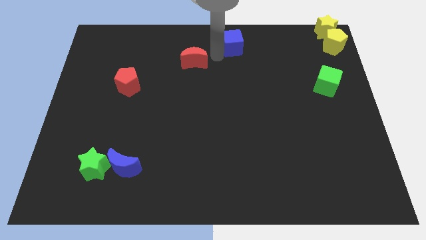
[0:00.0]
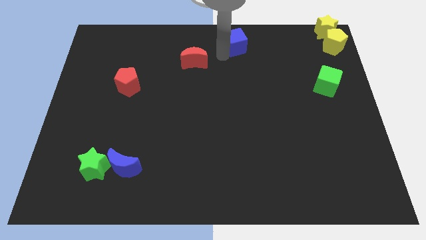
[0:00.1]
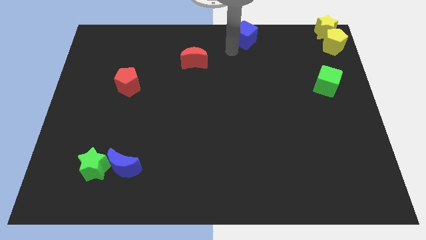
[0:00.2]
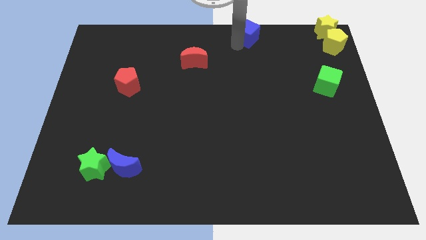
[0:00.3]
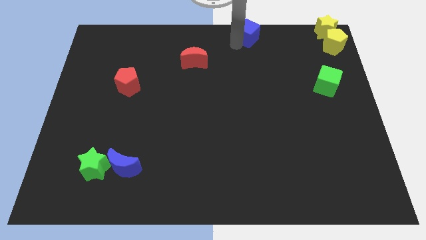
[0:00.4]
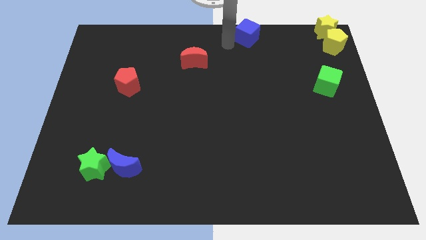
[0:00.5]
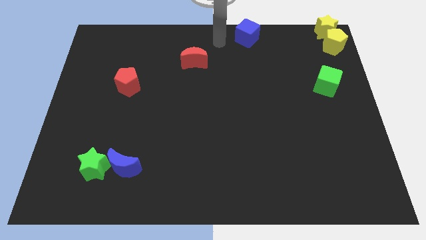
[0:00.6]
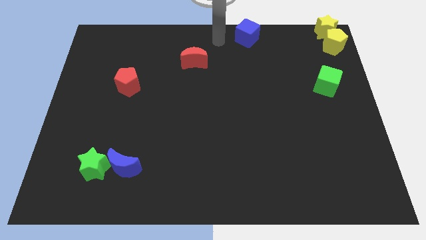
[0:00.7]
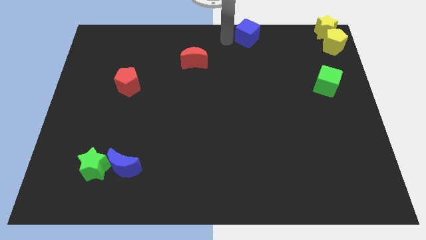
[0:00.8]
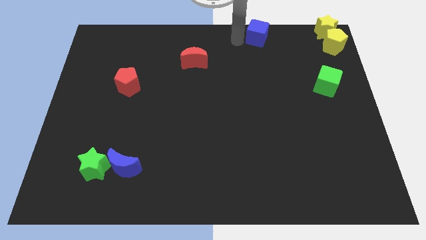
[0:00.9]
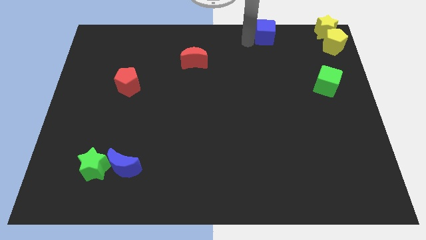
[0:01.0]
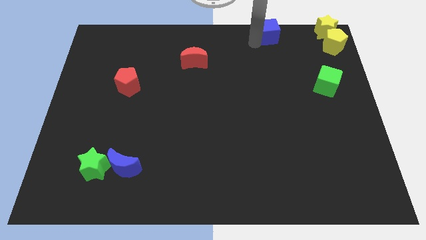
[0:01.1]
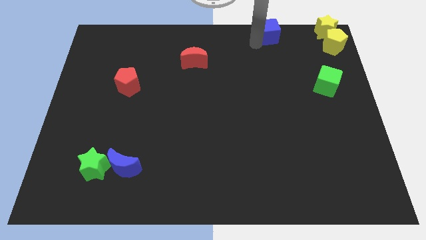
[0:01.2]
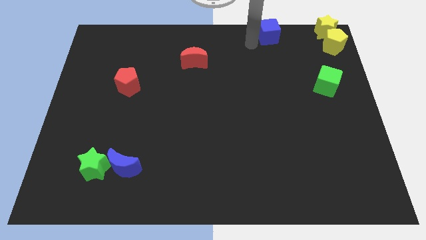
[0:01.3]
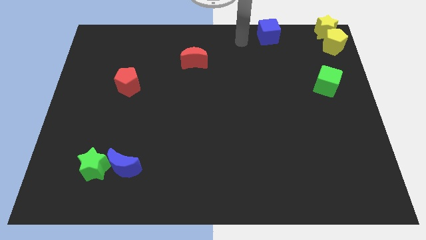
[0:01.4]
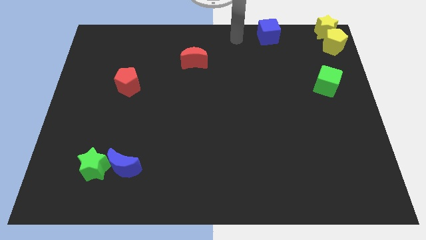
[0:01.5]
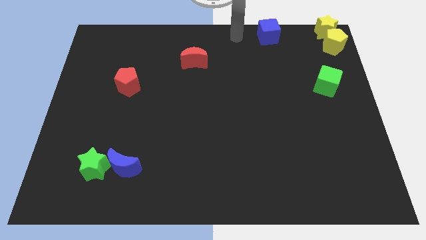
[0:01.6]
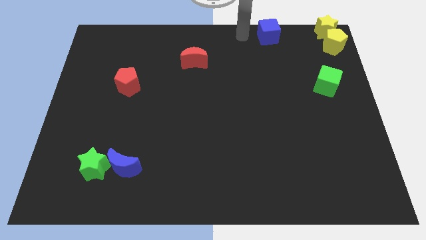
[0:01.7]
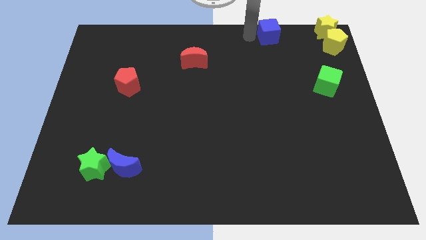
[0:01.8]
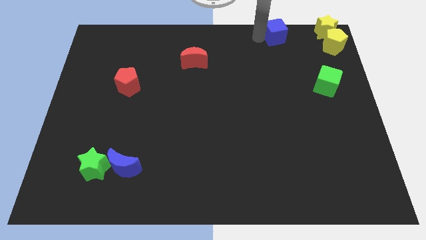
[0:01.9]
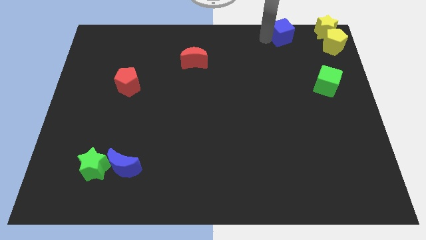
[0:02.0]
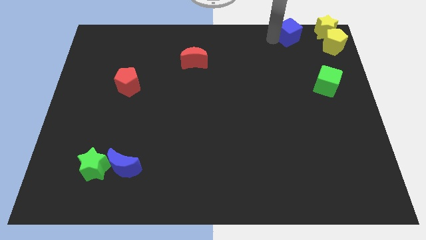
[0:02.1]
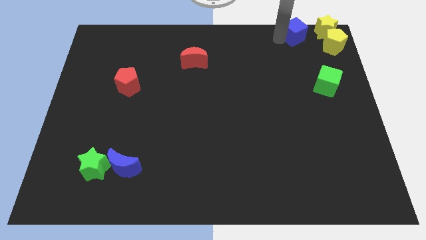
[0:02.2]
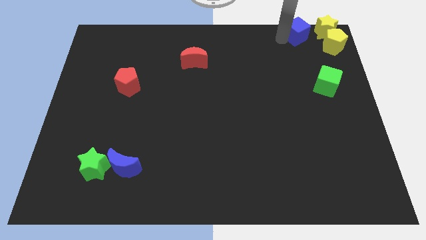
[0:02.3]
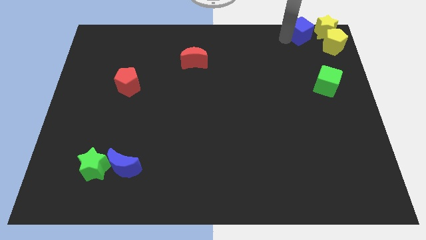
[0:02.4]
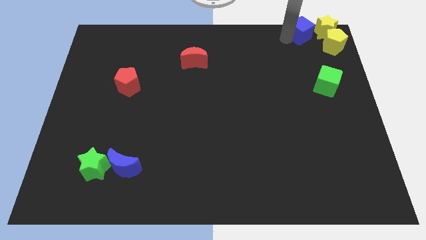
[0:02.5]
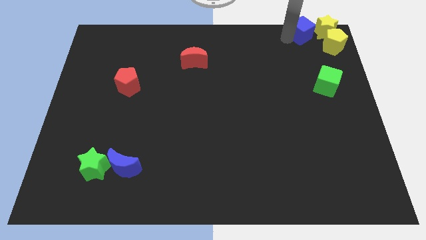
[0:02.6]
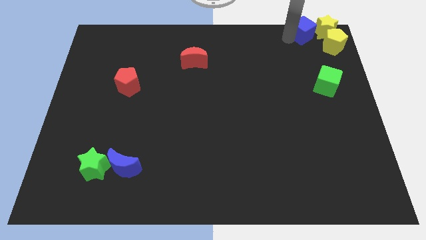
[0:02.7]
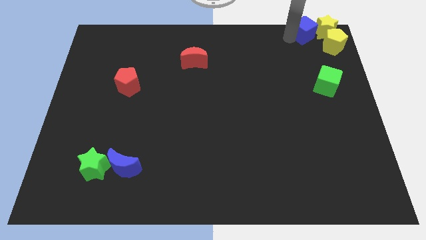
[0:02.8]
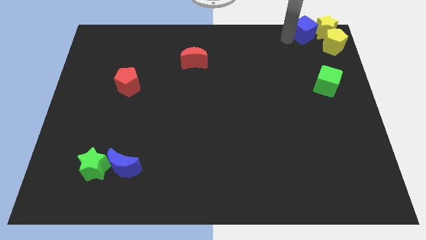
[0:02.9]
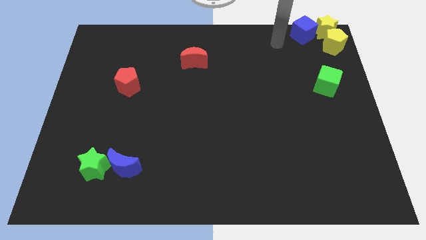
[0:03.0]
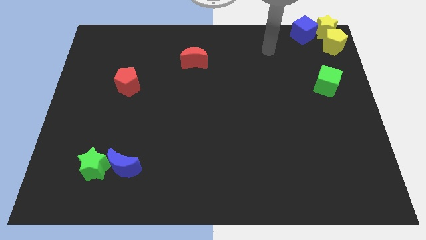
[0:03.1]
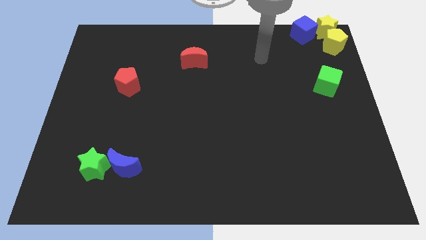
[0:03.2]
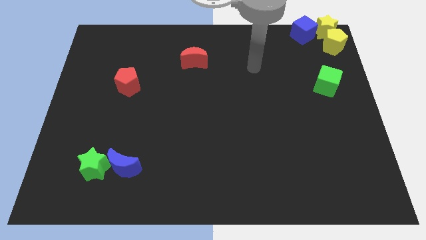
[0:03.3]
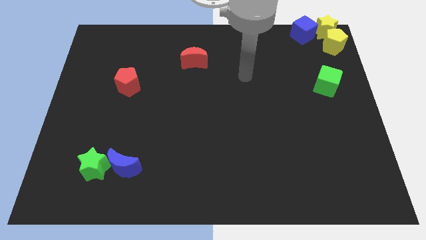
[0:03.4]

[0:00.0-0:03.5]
push the blue cube near to the yellow star

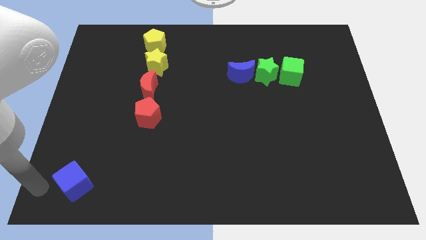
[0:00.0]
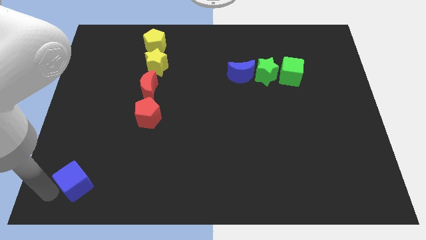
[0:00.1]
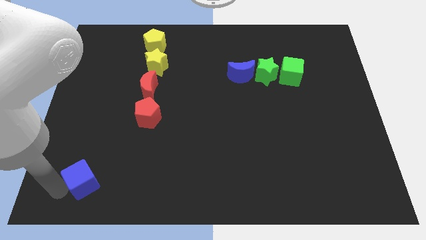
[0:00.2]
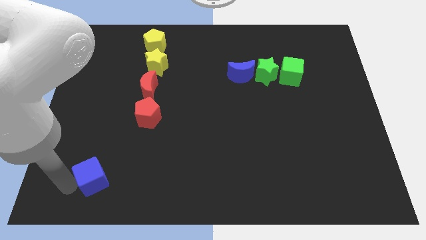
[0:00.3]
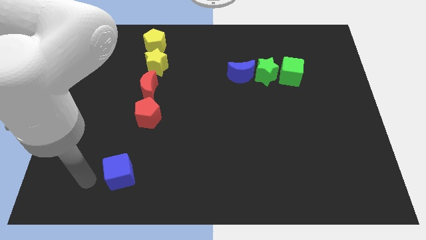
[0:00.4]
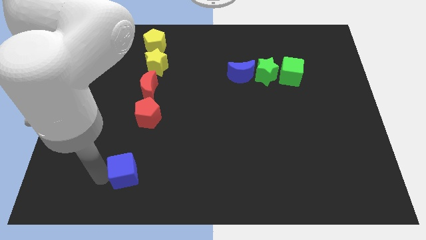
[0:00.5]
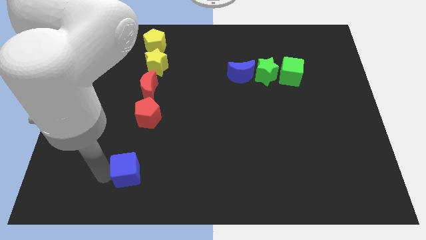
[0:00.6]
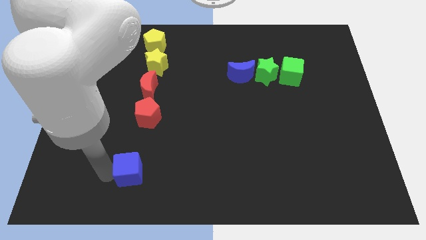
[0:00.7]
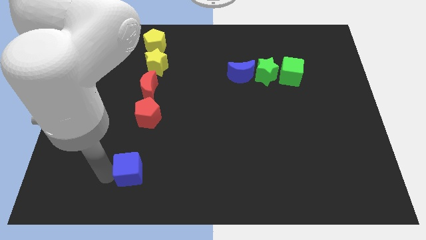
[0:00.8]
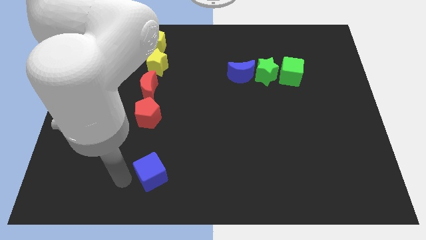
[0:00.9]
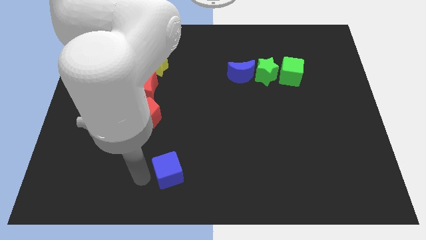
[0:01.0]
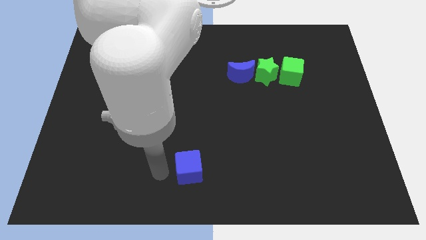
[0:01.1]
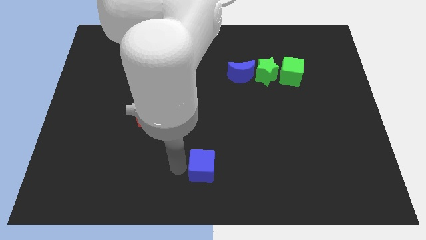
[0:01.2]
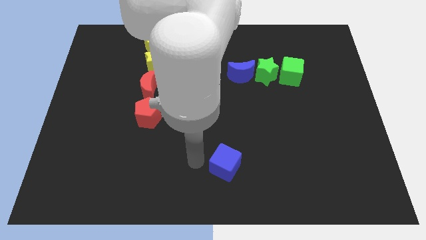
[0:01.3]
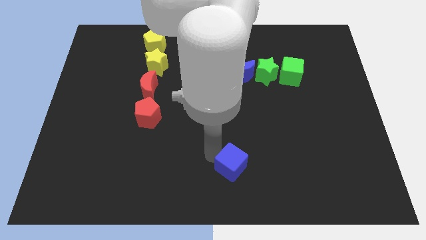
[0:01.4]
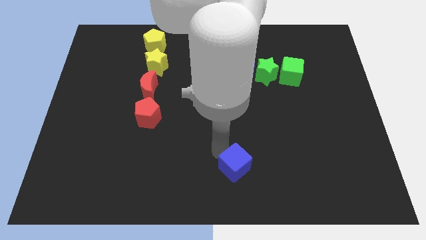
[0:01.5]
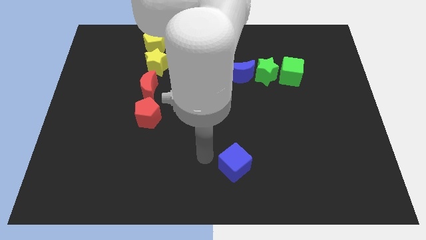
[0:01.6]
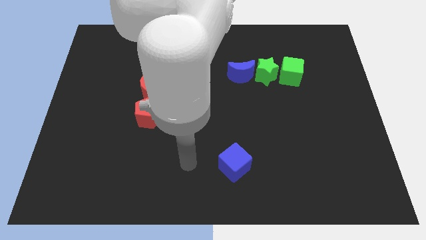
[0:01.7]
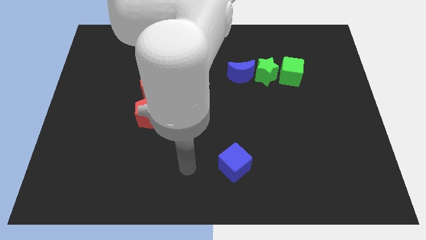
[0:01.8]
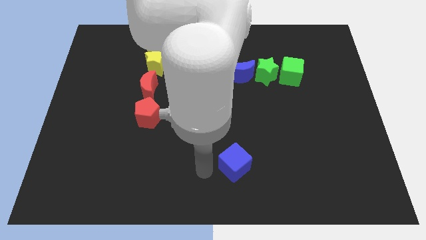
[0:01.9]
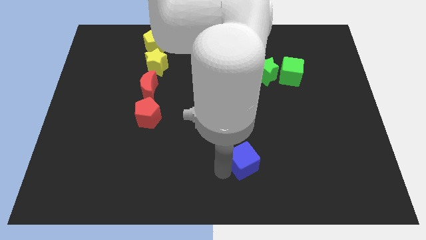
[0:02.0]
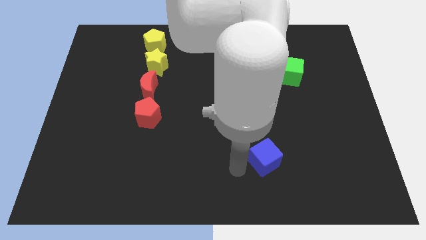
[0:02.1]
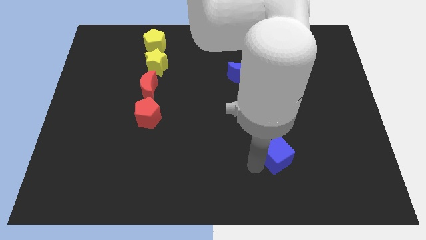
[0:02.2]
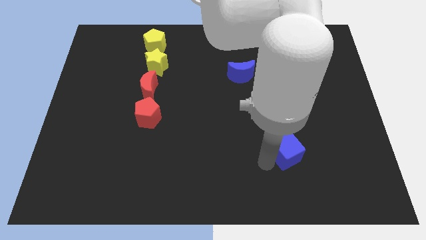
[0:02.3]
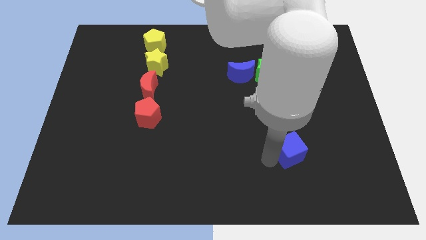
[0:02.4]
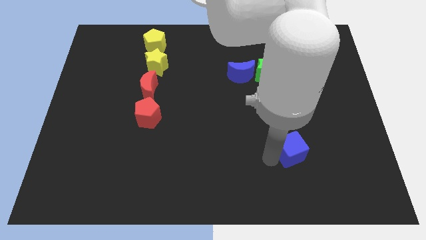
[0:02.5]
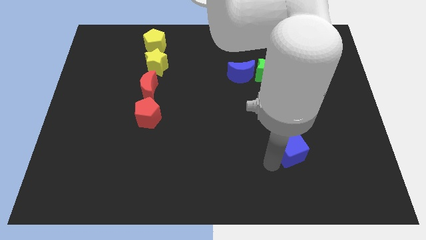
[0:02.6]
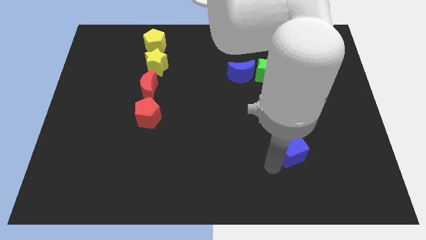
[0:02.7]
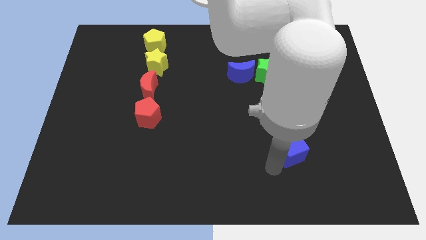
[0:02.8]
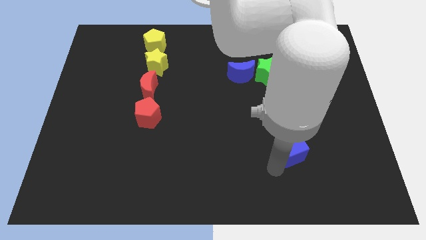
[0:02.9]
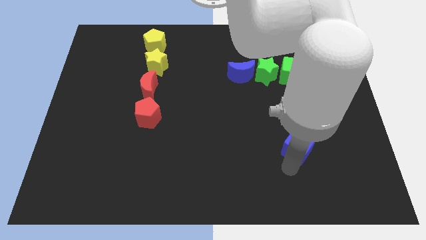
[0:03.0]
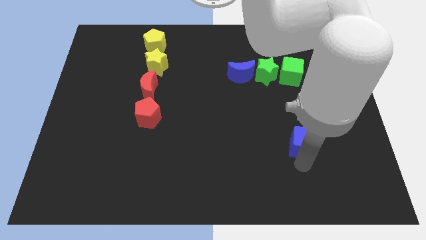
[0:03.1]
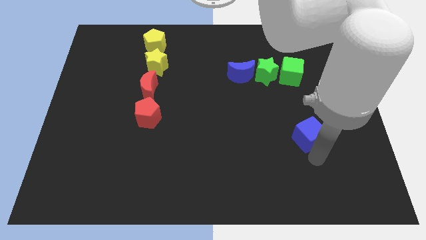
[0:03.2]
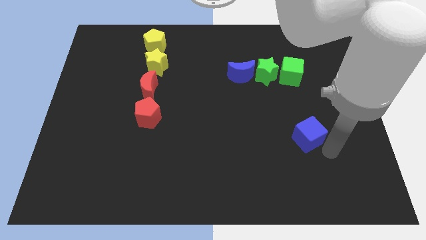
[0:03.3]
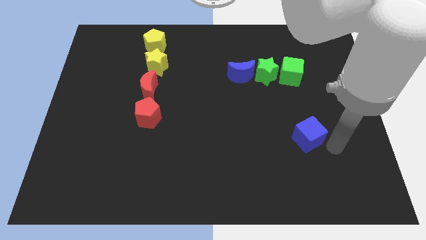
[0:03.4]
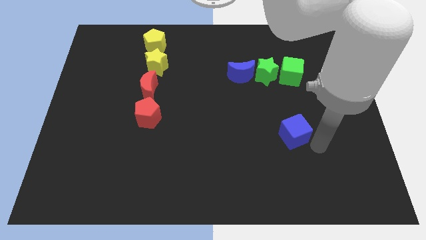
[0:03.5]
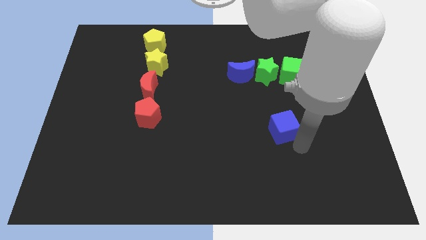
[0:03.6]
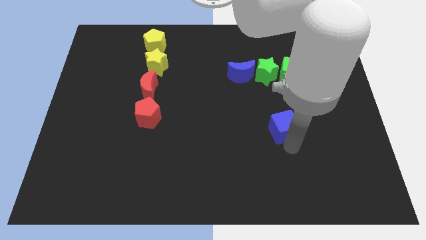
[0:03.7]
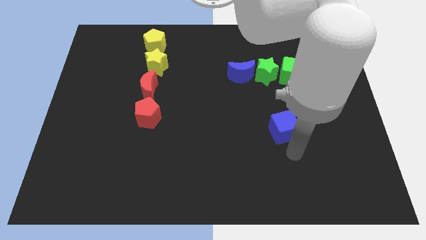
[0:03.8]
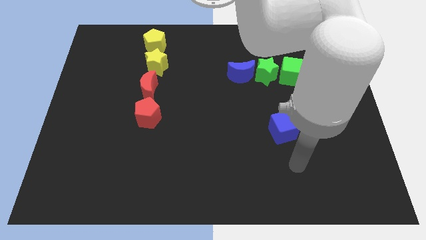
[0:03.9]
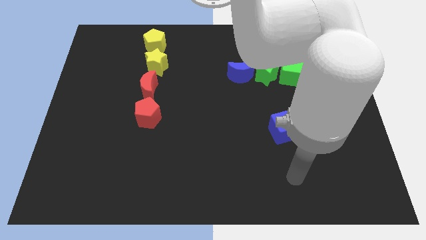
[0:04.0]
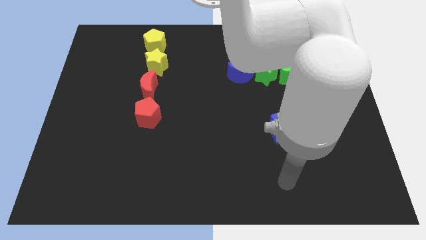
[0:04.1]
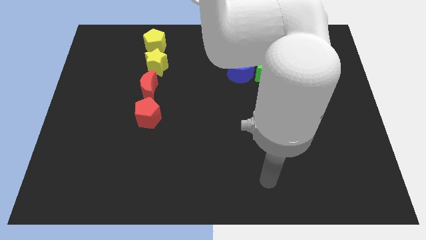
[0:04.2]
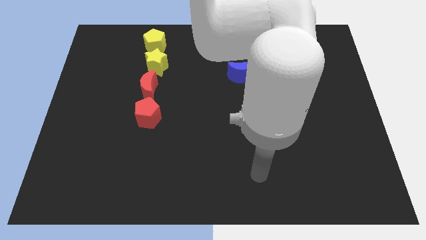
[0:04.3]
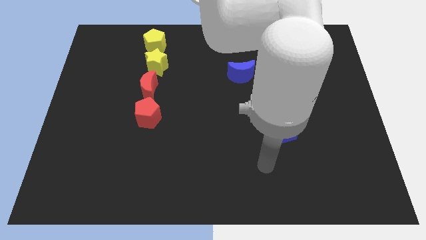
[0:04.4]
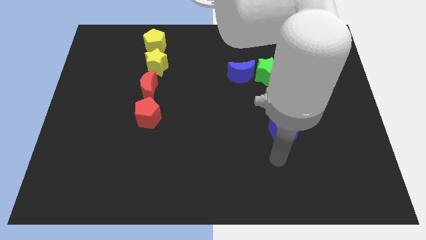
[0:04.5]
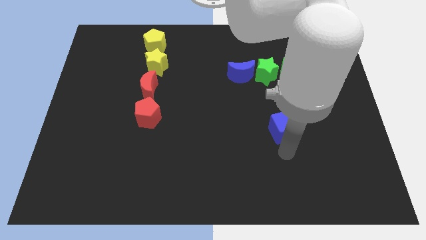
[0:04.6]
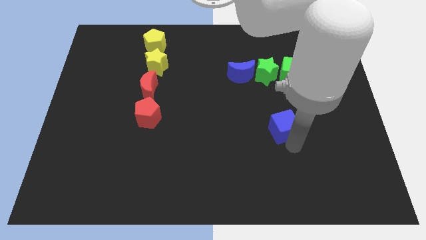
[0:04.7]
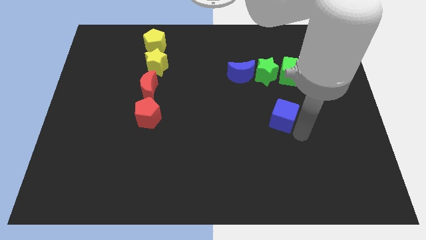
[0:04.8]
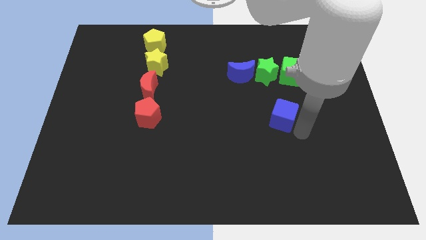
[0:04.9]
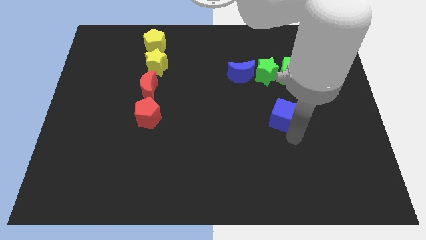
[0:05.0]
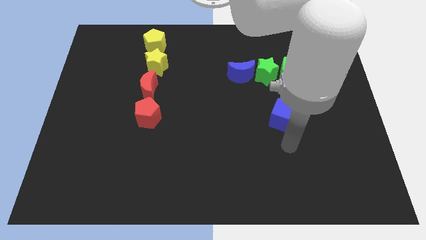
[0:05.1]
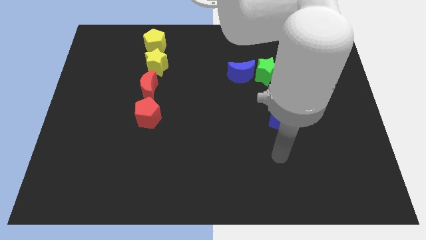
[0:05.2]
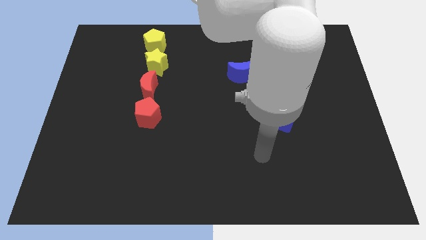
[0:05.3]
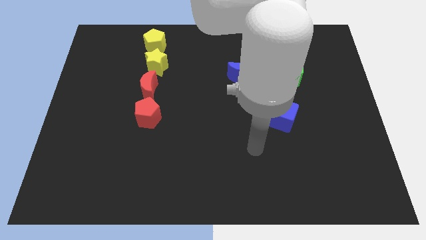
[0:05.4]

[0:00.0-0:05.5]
push the blue cube to the top of the board

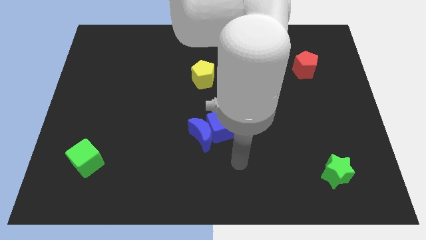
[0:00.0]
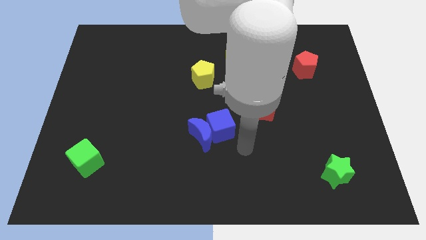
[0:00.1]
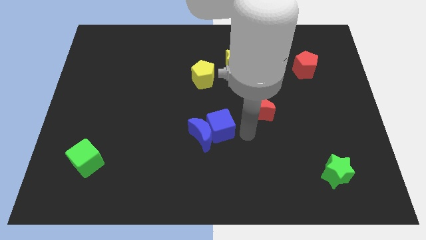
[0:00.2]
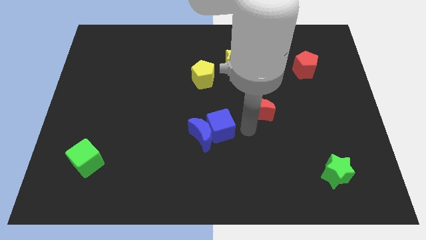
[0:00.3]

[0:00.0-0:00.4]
move your arm below the red moon
